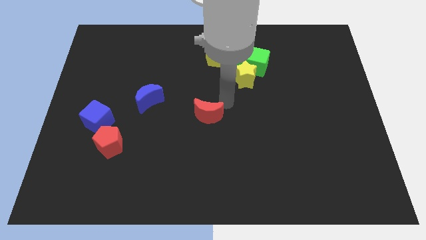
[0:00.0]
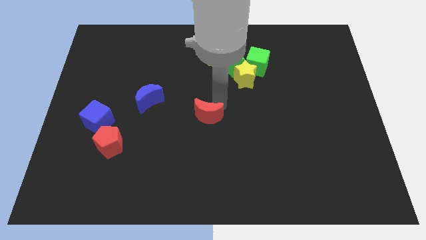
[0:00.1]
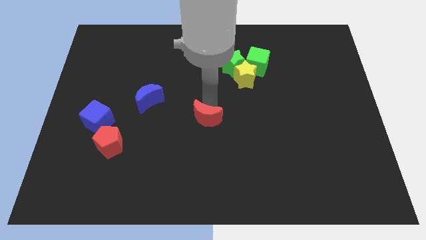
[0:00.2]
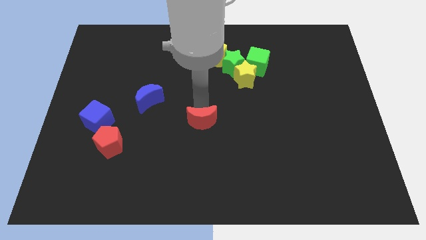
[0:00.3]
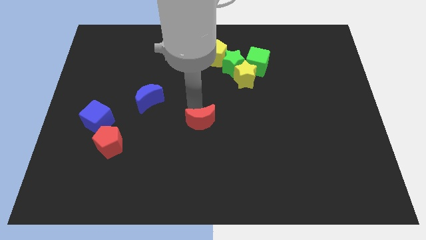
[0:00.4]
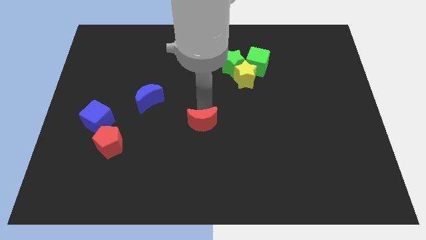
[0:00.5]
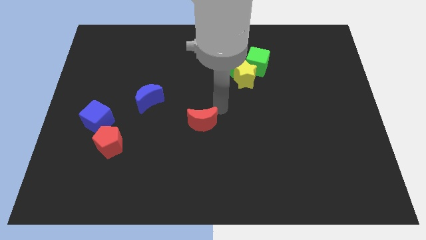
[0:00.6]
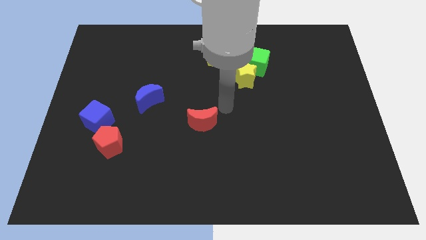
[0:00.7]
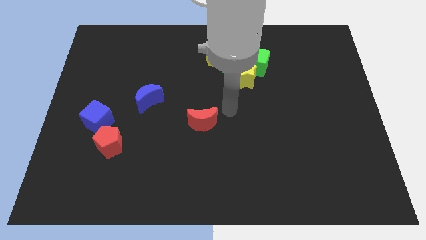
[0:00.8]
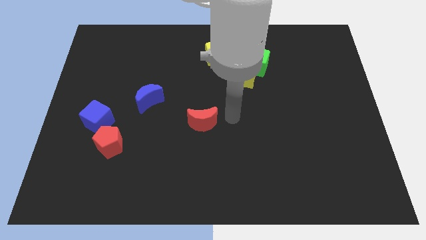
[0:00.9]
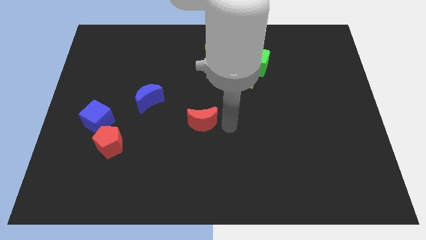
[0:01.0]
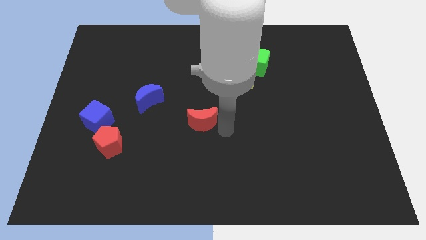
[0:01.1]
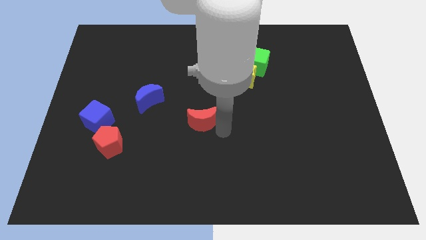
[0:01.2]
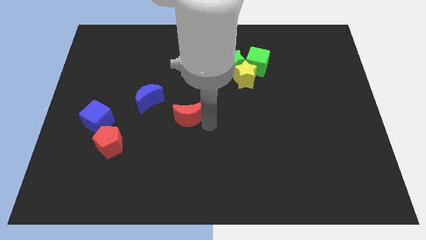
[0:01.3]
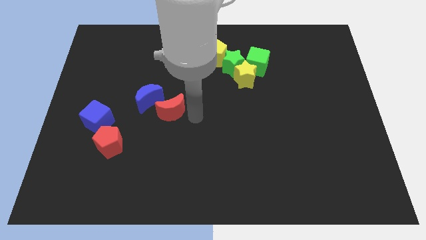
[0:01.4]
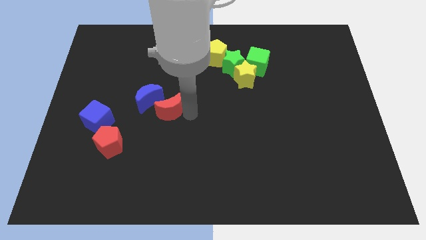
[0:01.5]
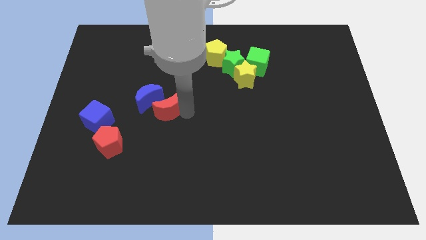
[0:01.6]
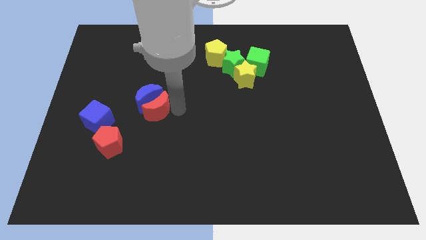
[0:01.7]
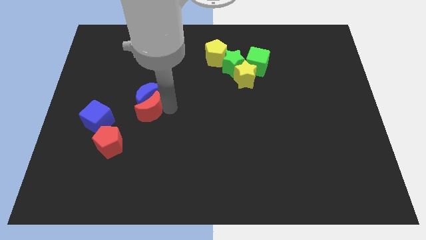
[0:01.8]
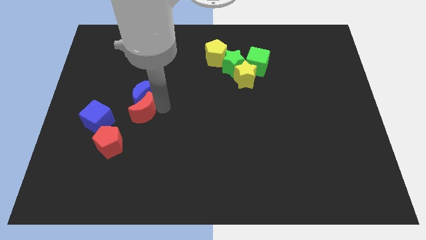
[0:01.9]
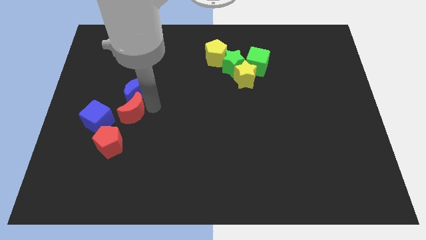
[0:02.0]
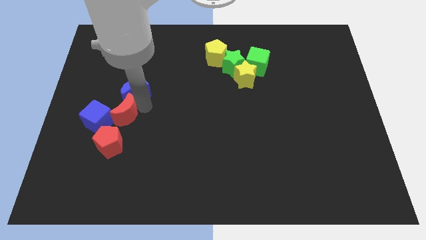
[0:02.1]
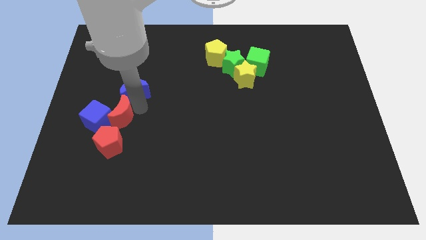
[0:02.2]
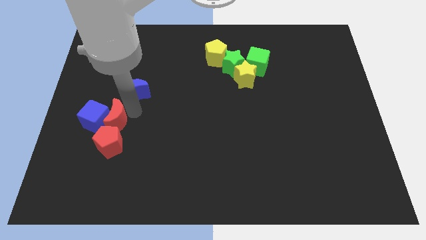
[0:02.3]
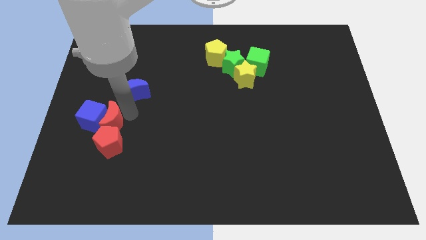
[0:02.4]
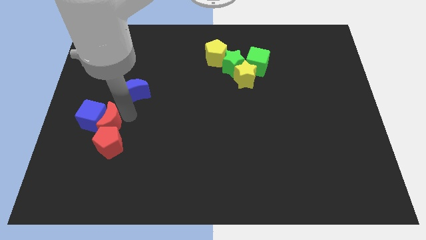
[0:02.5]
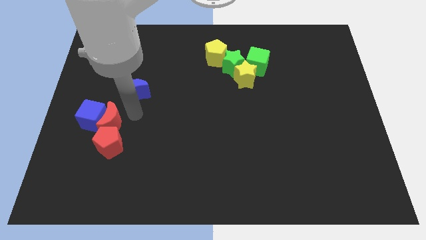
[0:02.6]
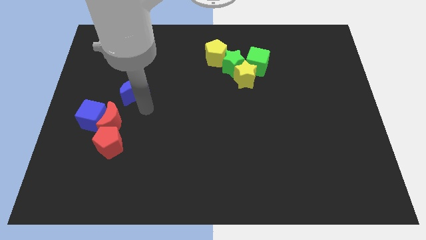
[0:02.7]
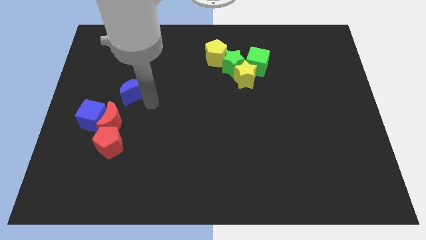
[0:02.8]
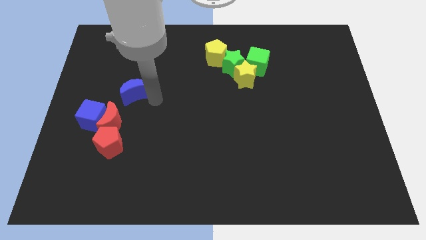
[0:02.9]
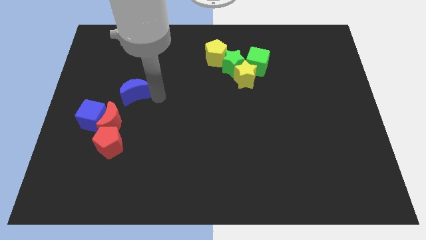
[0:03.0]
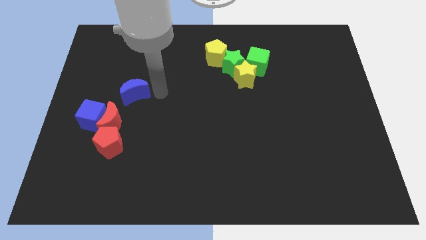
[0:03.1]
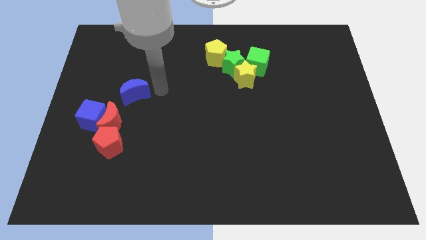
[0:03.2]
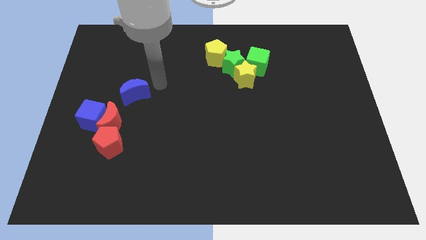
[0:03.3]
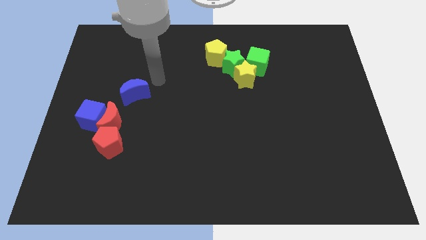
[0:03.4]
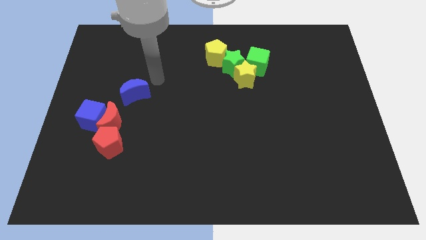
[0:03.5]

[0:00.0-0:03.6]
move the red moon into the blue cube

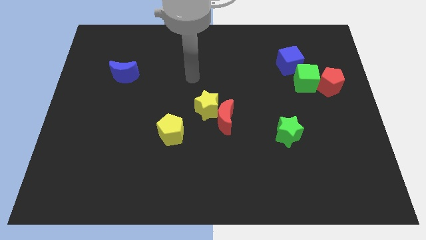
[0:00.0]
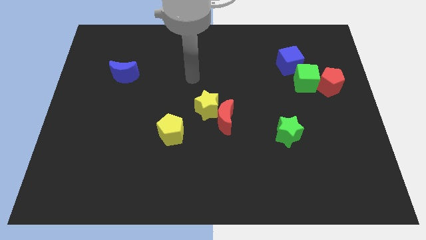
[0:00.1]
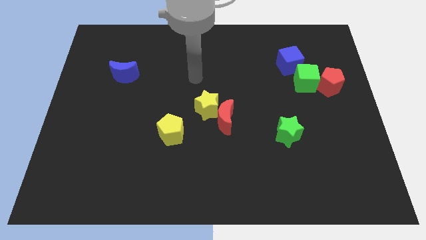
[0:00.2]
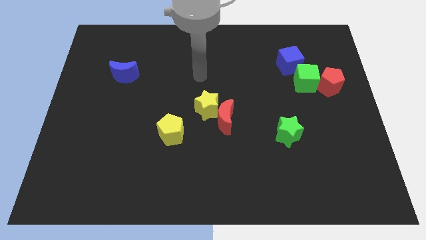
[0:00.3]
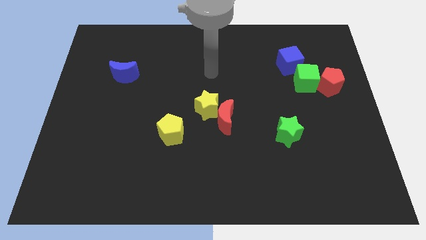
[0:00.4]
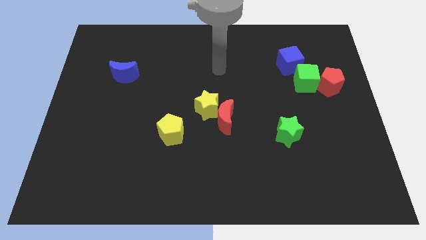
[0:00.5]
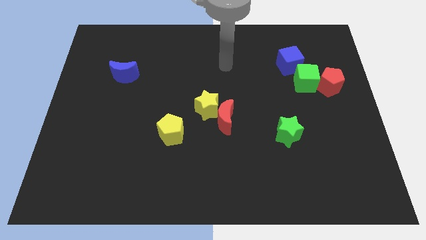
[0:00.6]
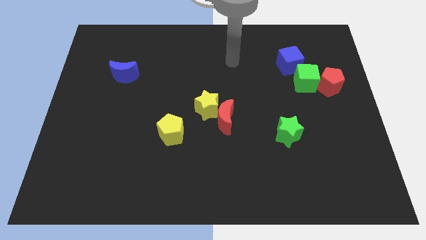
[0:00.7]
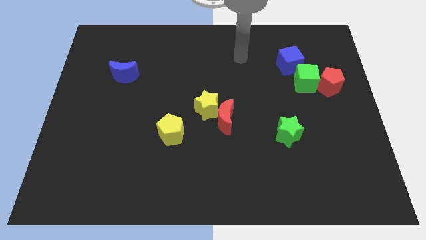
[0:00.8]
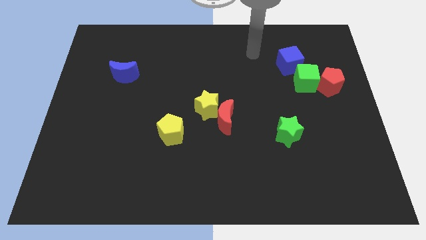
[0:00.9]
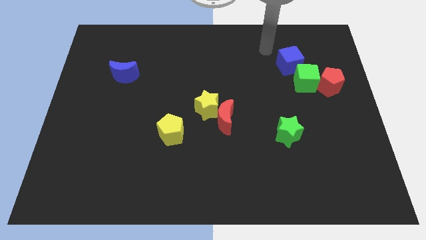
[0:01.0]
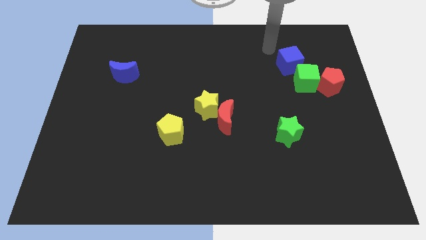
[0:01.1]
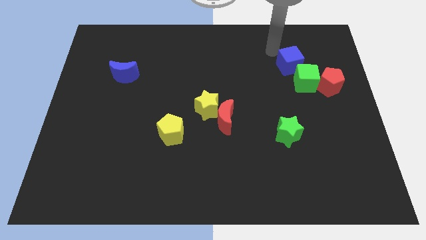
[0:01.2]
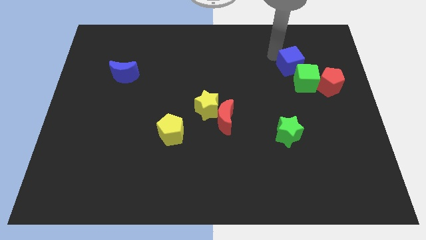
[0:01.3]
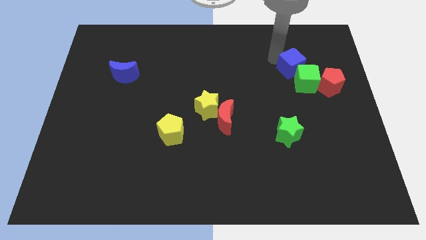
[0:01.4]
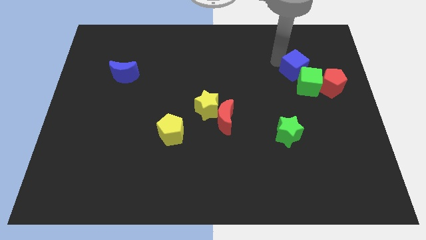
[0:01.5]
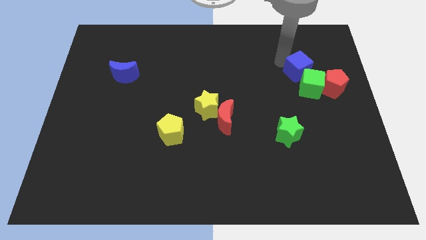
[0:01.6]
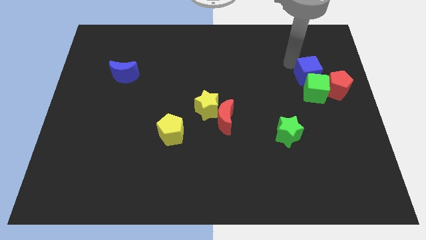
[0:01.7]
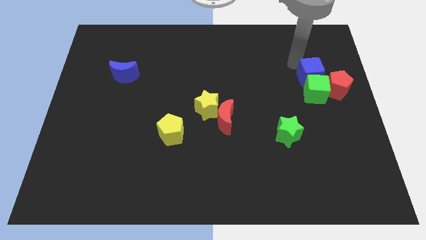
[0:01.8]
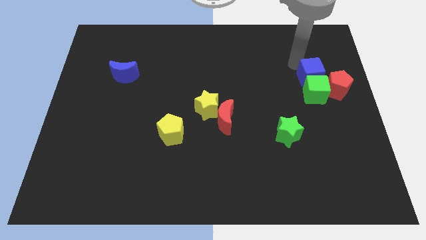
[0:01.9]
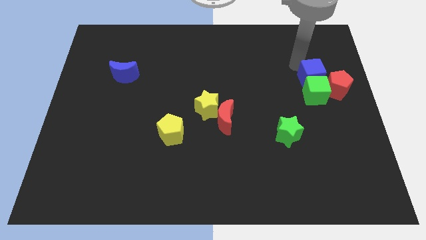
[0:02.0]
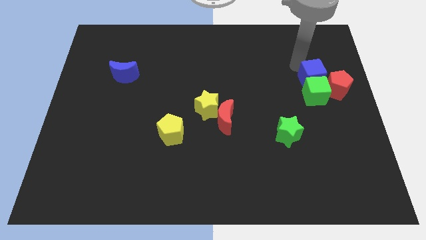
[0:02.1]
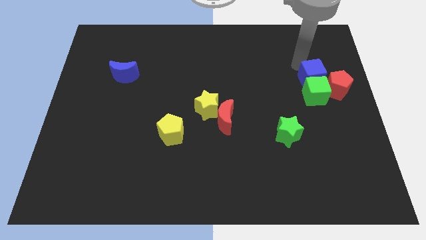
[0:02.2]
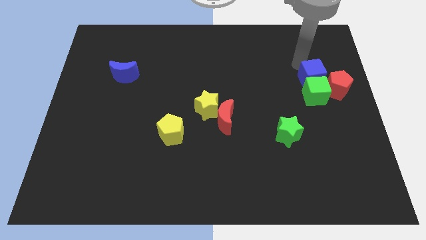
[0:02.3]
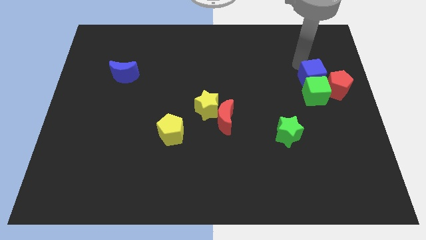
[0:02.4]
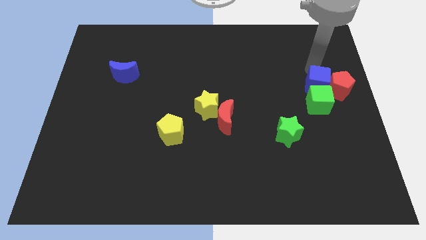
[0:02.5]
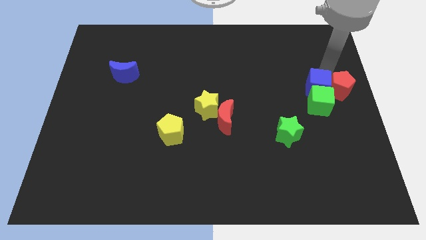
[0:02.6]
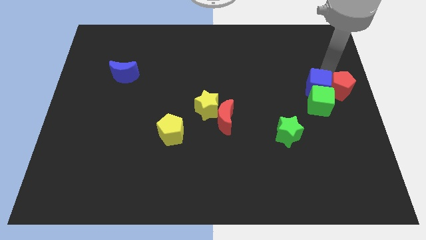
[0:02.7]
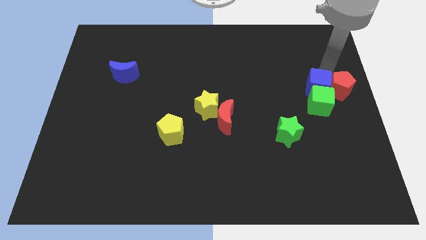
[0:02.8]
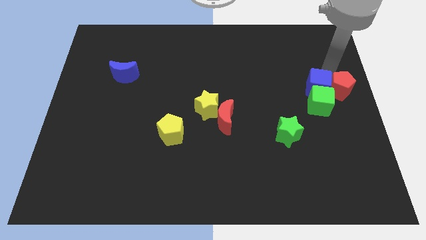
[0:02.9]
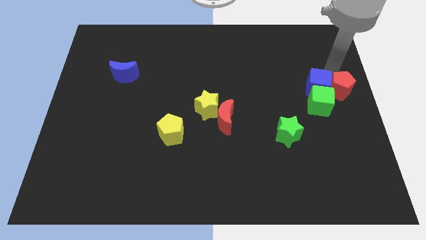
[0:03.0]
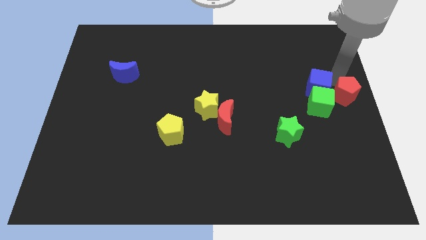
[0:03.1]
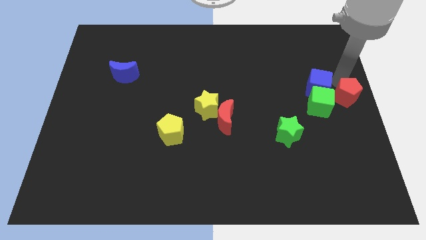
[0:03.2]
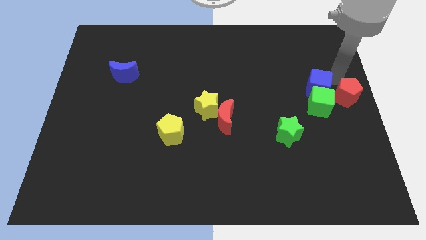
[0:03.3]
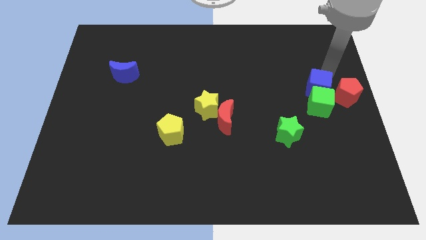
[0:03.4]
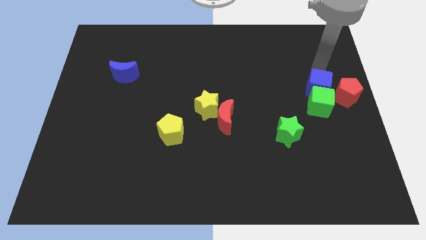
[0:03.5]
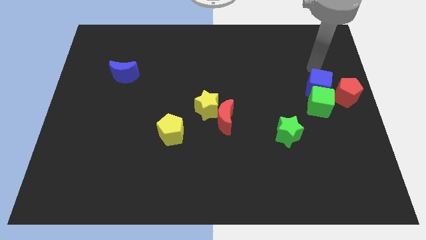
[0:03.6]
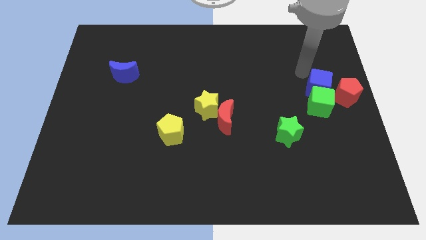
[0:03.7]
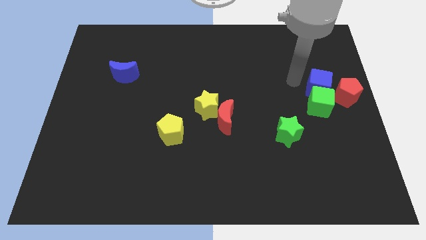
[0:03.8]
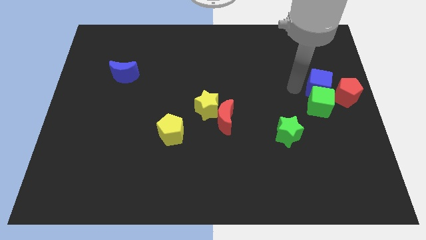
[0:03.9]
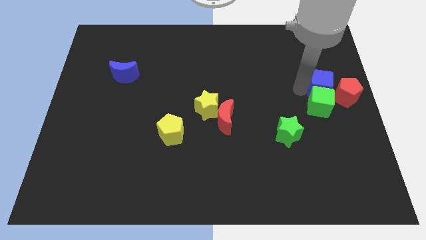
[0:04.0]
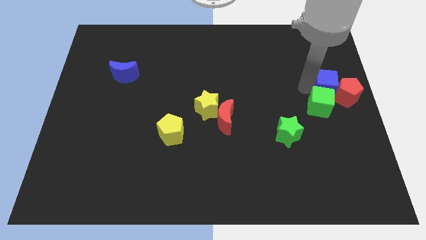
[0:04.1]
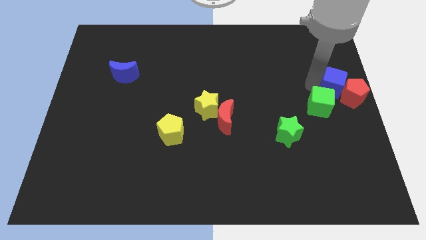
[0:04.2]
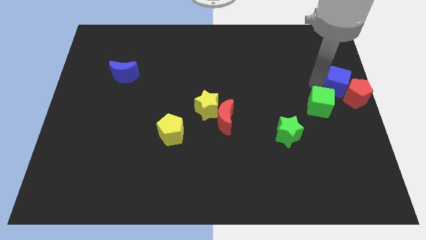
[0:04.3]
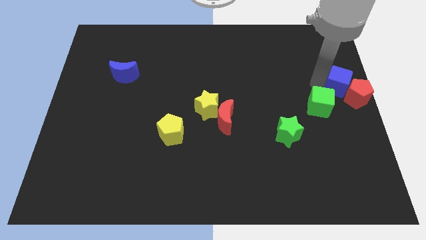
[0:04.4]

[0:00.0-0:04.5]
move the blue cube and red pentagon to the center right

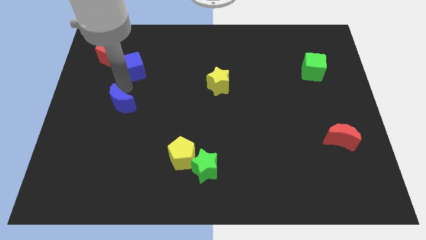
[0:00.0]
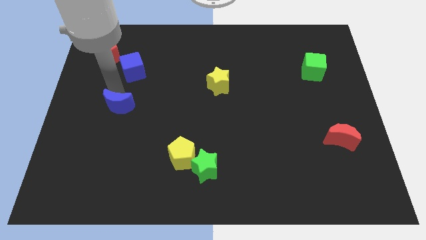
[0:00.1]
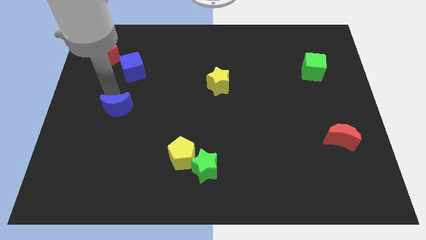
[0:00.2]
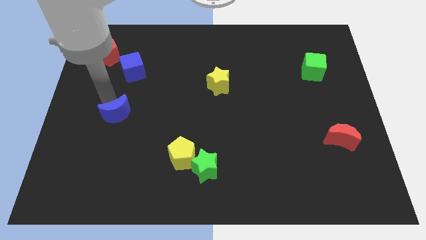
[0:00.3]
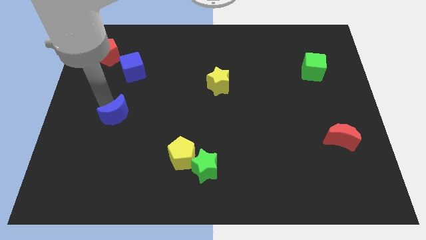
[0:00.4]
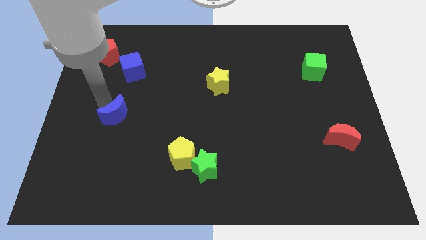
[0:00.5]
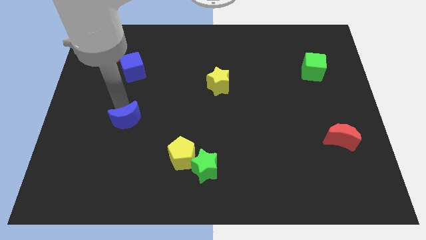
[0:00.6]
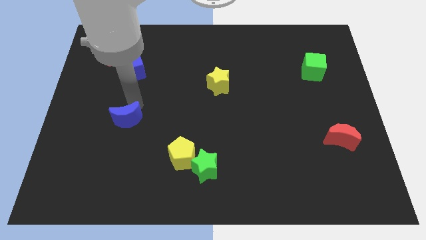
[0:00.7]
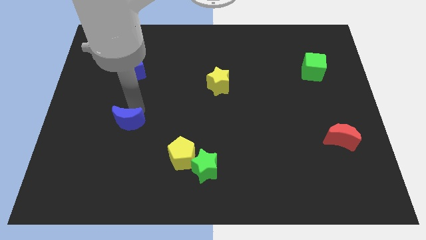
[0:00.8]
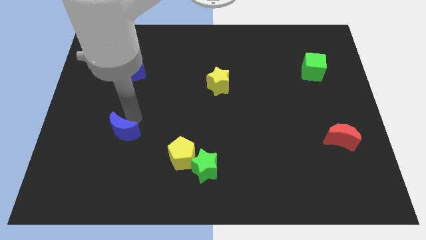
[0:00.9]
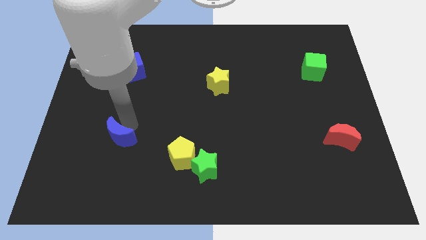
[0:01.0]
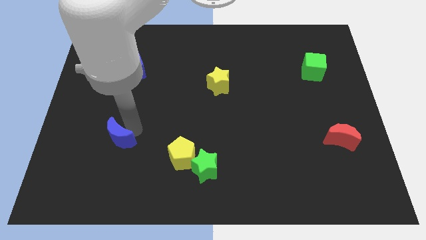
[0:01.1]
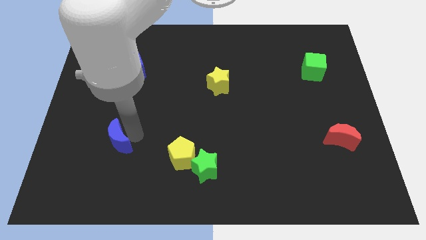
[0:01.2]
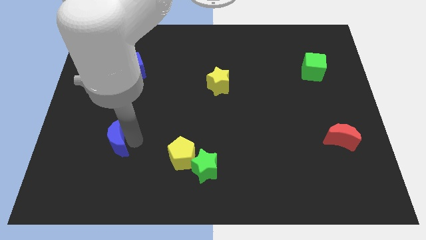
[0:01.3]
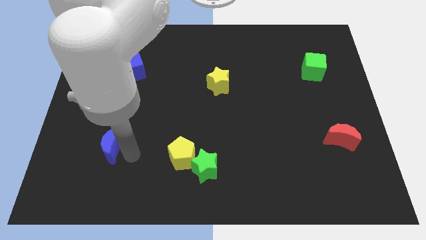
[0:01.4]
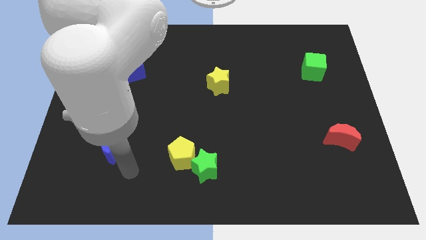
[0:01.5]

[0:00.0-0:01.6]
move the blue moon away from the bottom side of the blue cube
